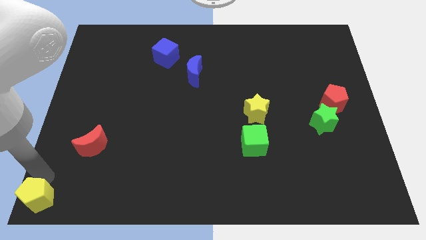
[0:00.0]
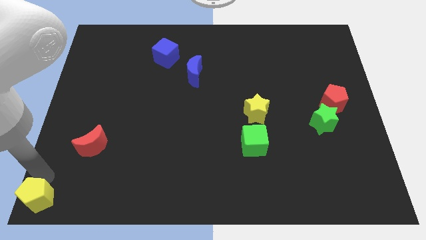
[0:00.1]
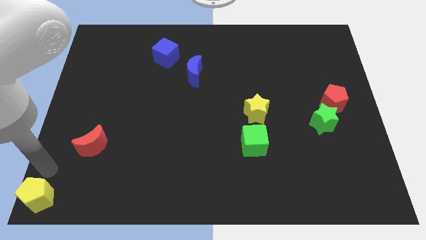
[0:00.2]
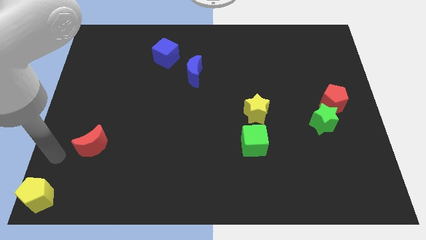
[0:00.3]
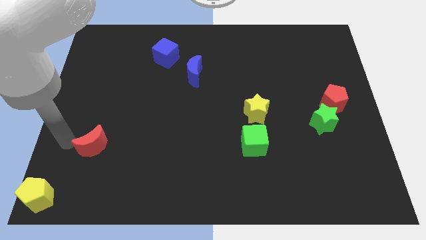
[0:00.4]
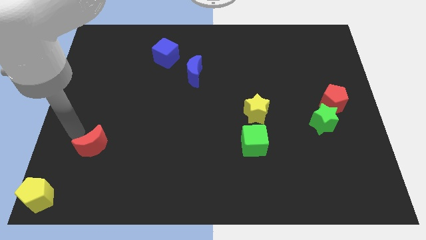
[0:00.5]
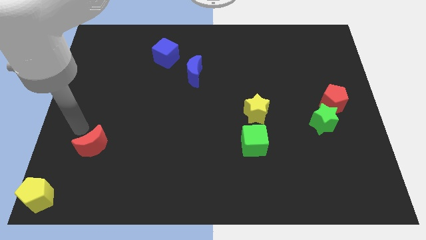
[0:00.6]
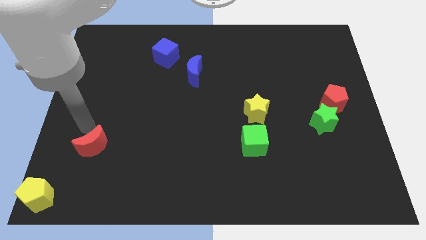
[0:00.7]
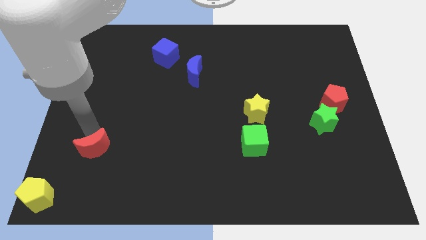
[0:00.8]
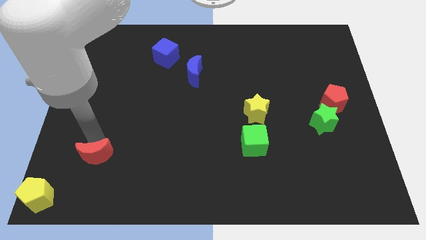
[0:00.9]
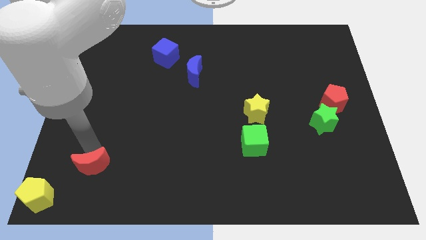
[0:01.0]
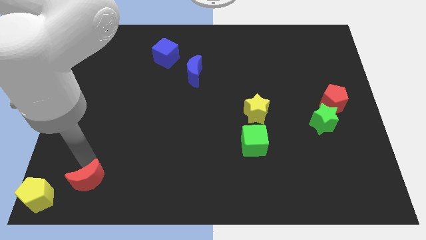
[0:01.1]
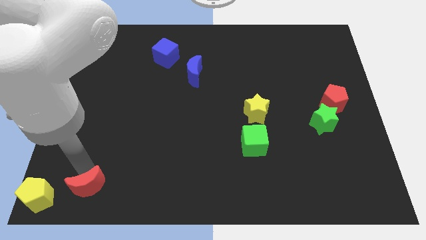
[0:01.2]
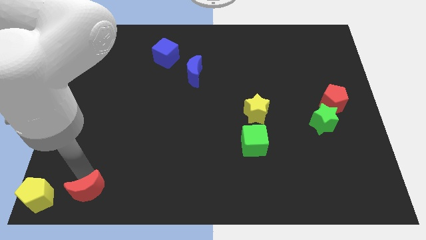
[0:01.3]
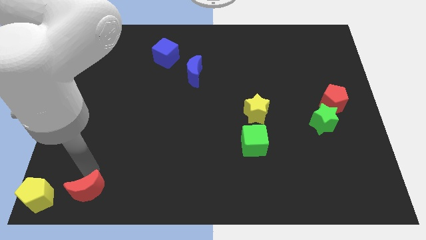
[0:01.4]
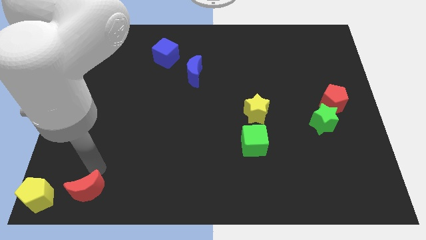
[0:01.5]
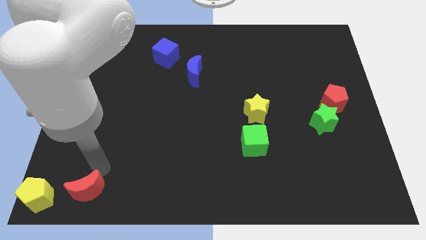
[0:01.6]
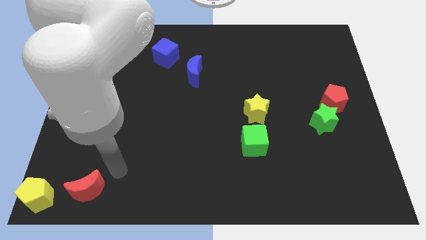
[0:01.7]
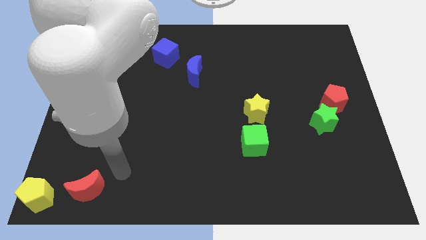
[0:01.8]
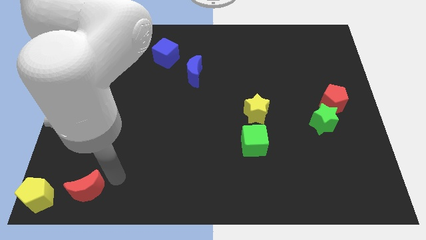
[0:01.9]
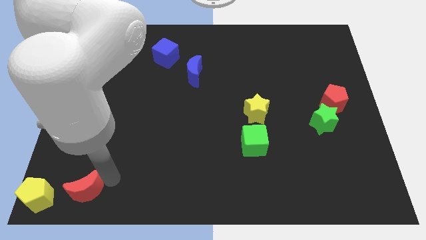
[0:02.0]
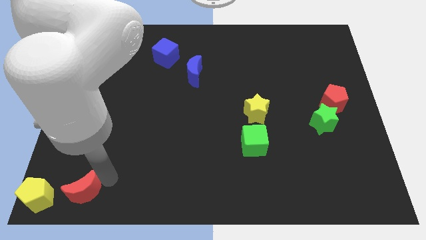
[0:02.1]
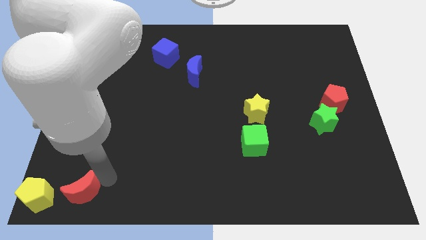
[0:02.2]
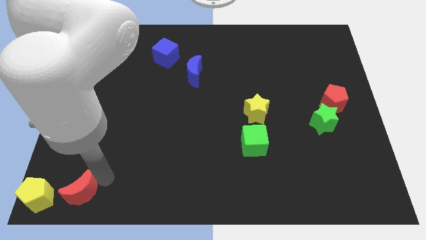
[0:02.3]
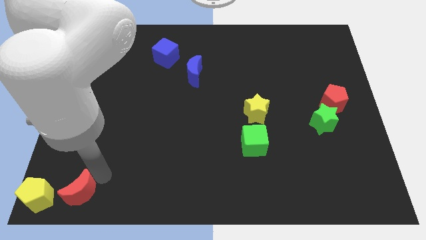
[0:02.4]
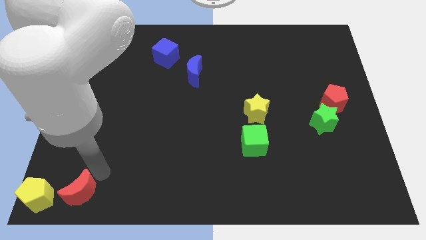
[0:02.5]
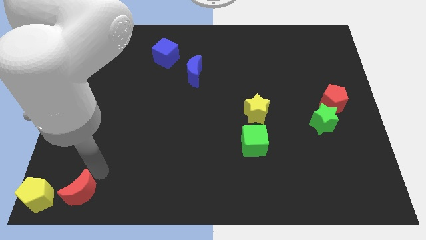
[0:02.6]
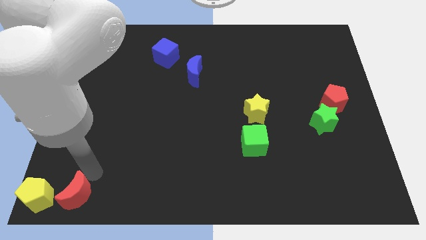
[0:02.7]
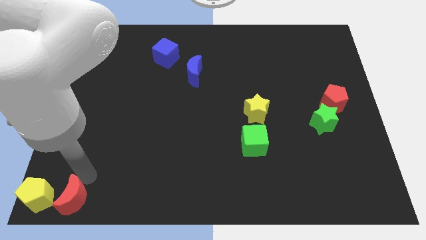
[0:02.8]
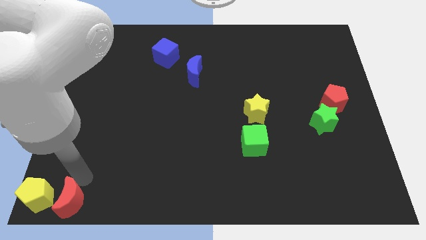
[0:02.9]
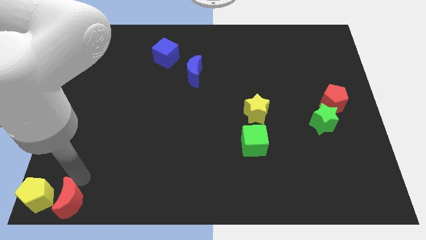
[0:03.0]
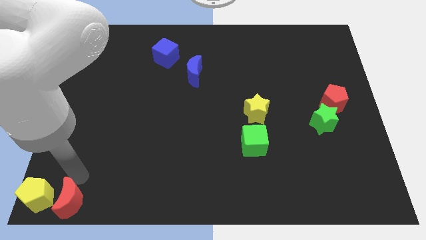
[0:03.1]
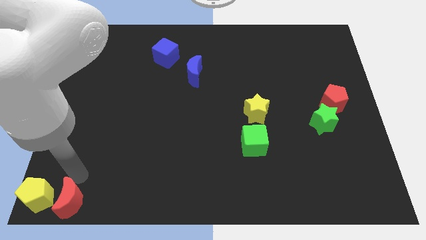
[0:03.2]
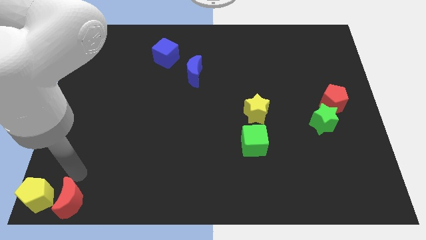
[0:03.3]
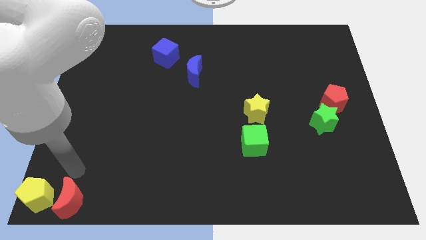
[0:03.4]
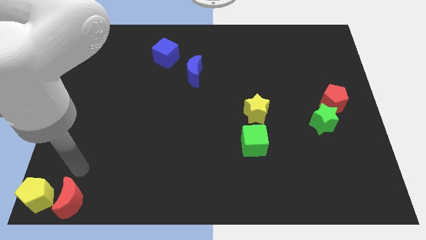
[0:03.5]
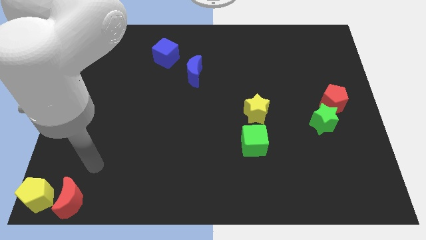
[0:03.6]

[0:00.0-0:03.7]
place the red crescent right to the yellow pentagon

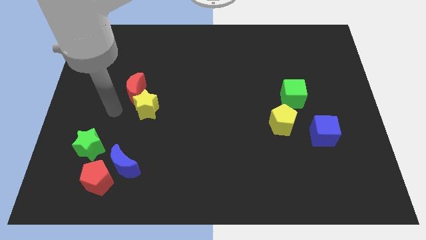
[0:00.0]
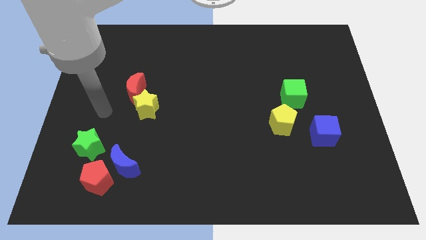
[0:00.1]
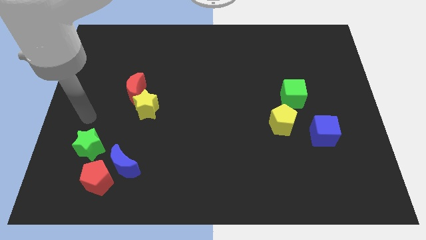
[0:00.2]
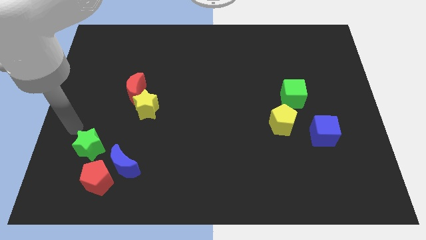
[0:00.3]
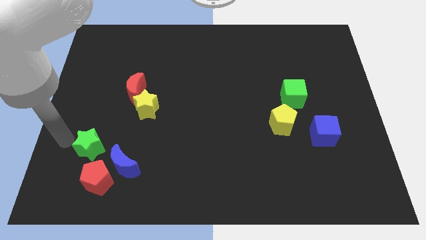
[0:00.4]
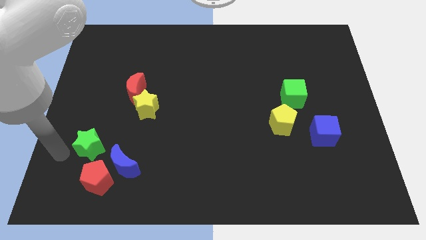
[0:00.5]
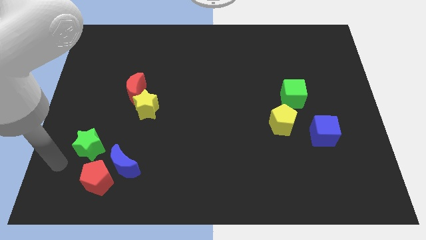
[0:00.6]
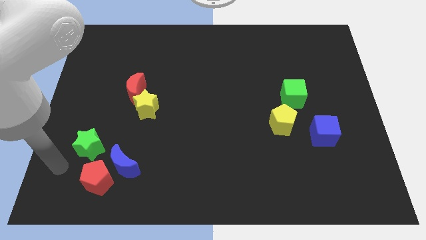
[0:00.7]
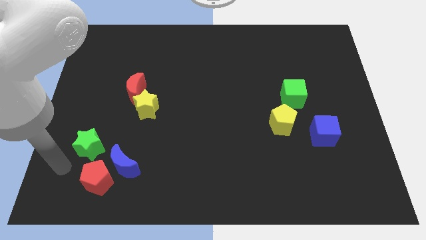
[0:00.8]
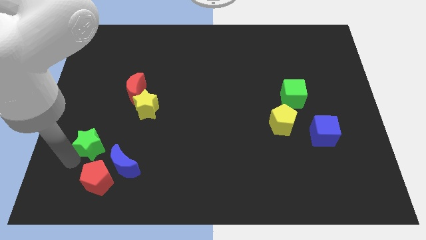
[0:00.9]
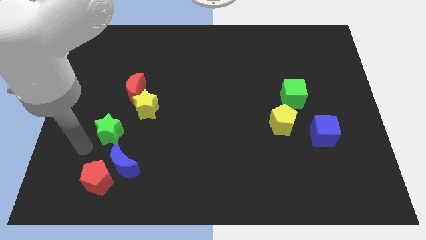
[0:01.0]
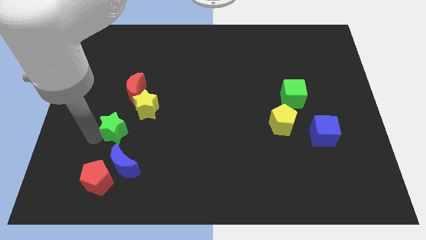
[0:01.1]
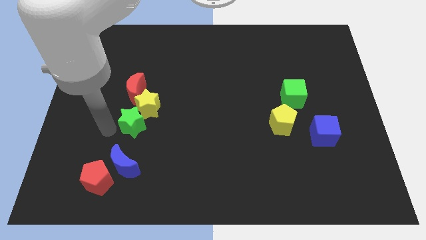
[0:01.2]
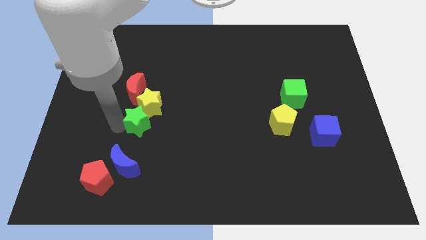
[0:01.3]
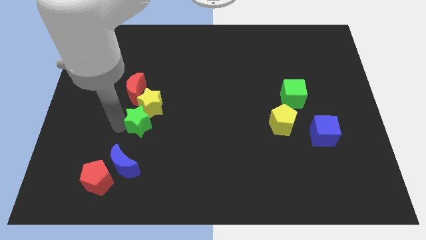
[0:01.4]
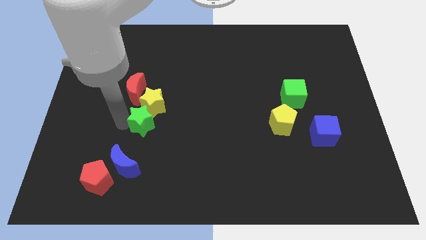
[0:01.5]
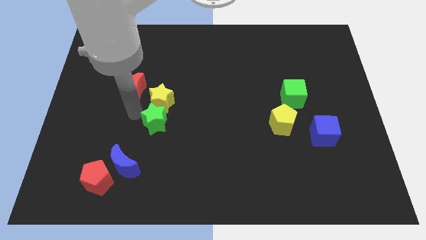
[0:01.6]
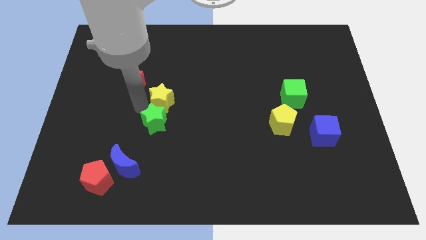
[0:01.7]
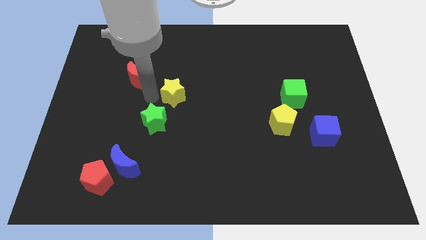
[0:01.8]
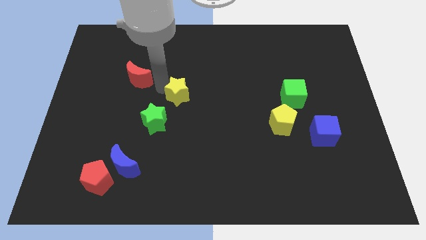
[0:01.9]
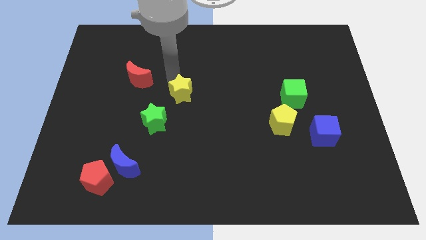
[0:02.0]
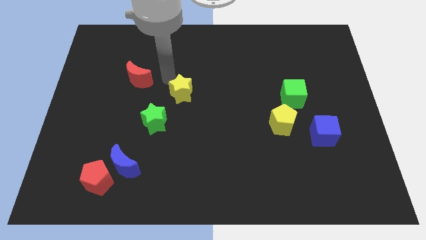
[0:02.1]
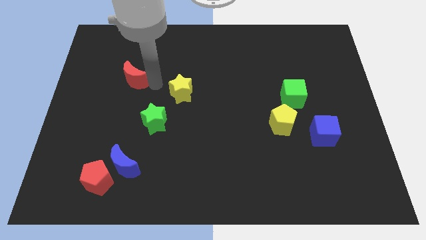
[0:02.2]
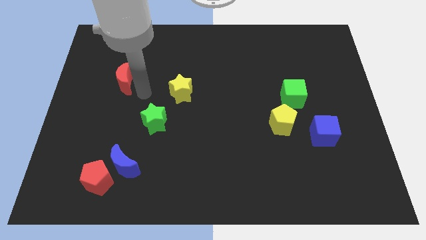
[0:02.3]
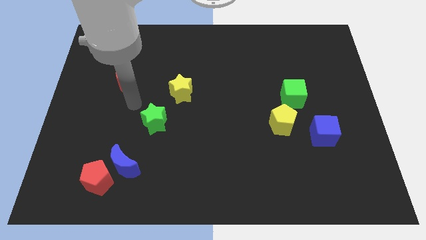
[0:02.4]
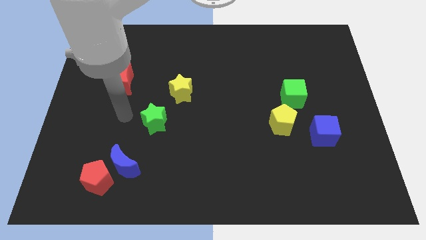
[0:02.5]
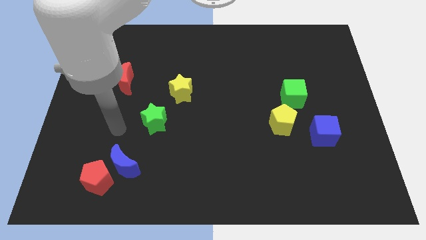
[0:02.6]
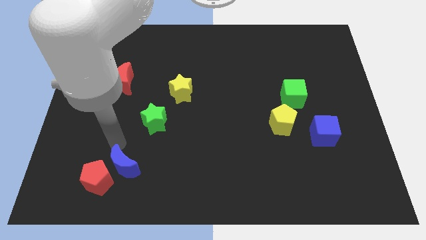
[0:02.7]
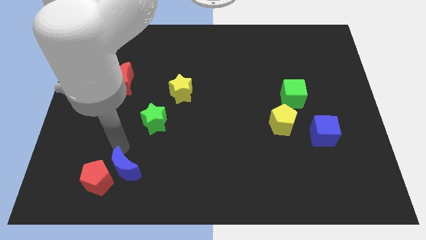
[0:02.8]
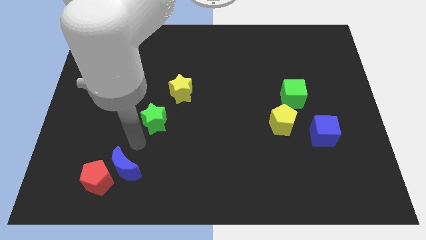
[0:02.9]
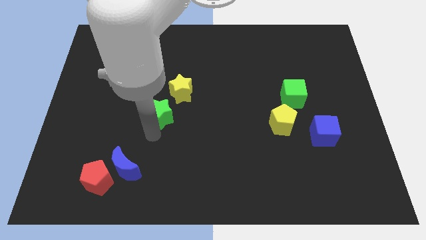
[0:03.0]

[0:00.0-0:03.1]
move the green star in between the yellow star and blue moon

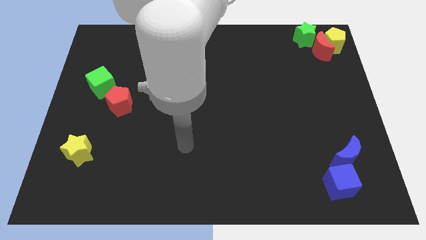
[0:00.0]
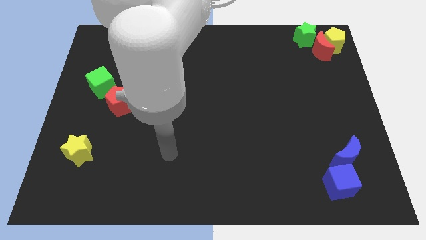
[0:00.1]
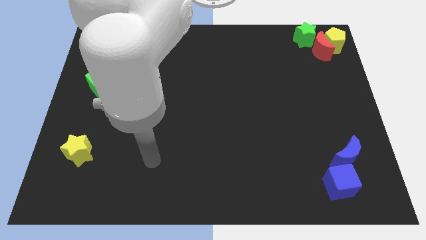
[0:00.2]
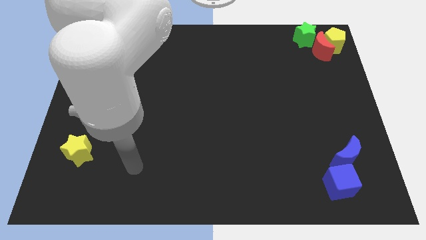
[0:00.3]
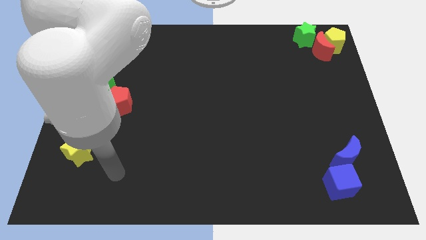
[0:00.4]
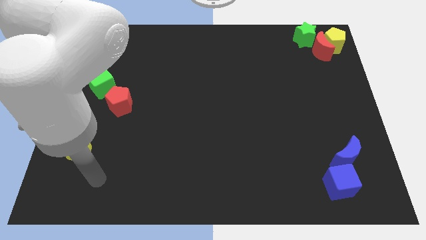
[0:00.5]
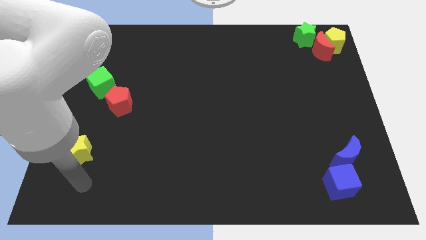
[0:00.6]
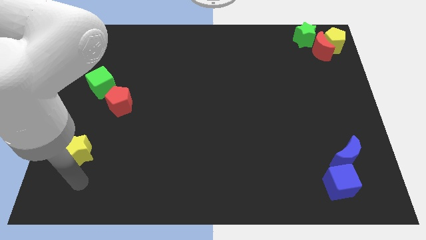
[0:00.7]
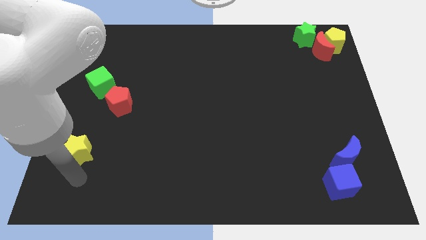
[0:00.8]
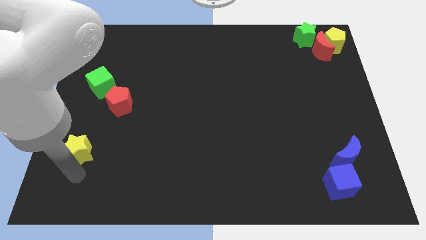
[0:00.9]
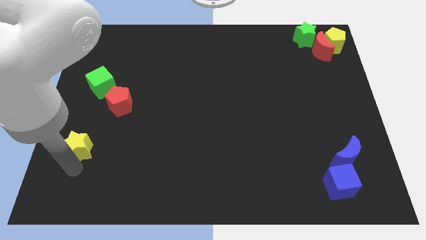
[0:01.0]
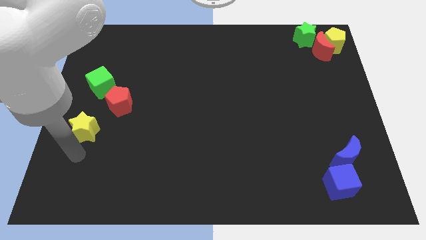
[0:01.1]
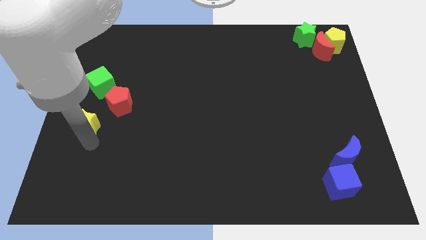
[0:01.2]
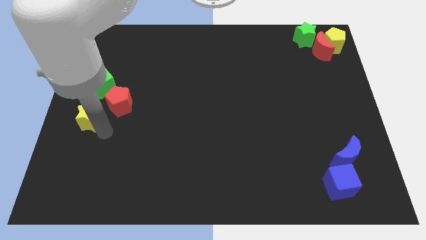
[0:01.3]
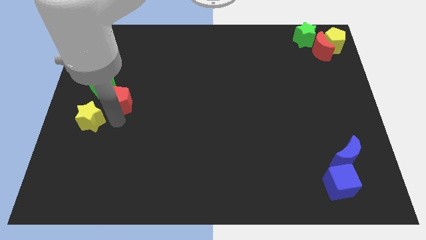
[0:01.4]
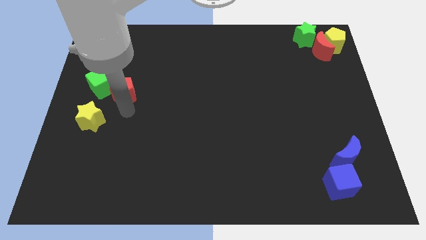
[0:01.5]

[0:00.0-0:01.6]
move the yellow star towards green square

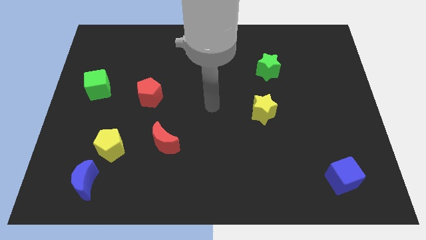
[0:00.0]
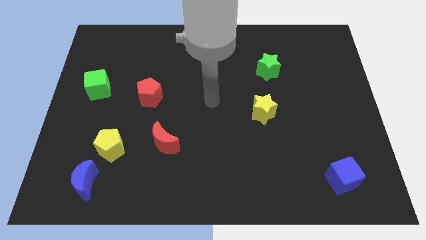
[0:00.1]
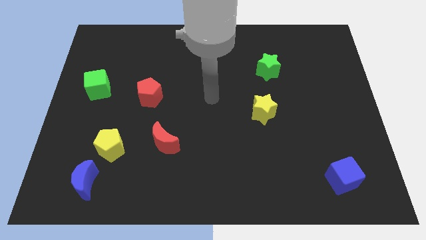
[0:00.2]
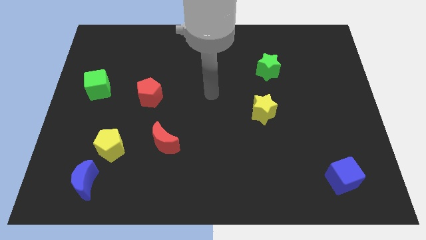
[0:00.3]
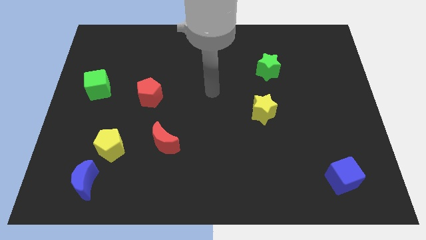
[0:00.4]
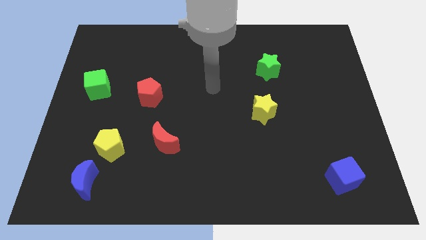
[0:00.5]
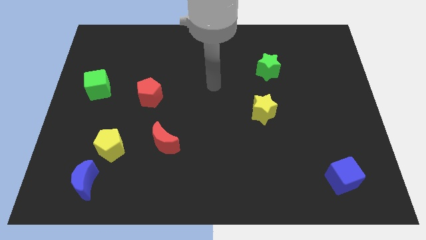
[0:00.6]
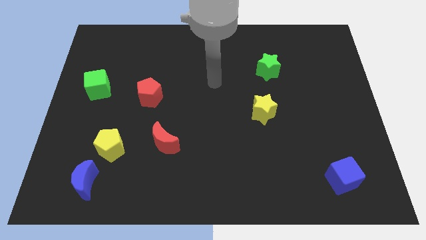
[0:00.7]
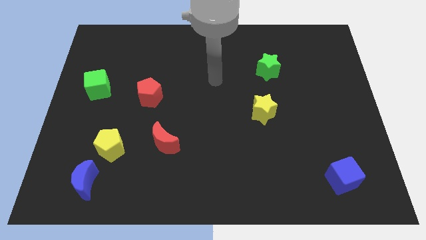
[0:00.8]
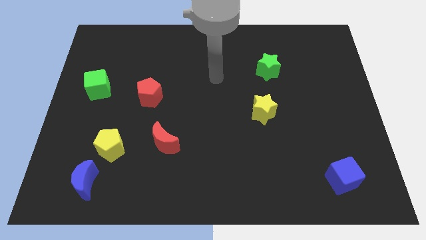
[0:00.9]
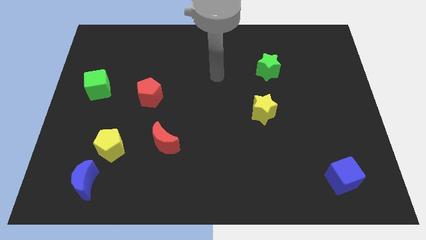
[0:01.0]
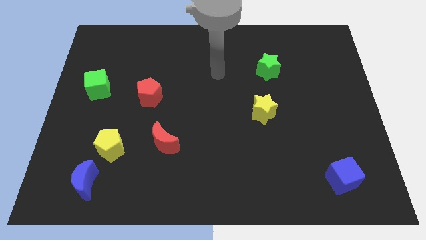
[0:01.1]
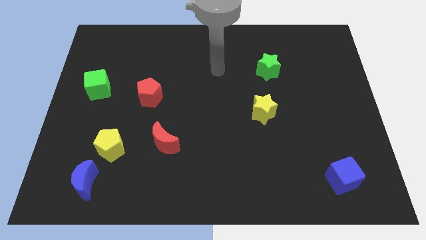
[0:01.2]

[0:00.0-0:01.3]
place your arm at the left of the green star
